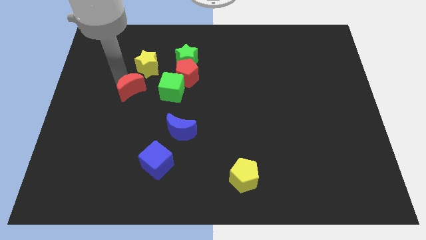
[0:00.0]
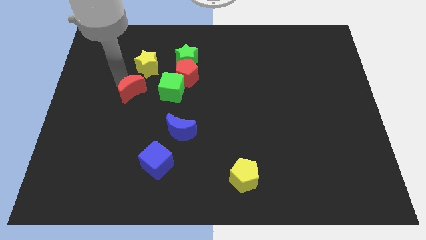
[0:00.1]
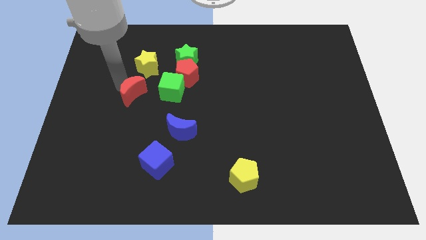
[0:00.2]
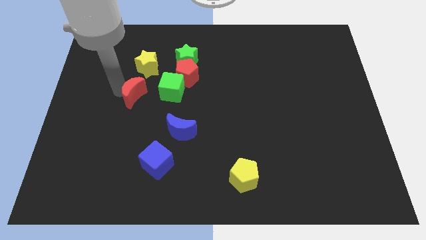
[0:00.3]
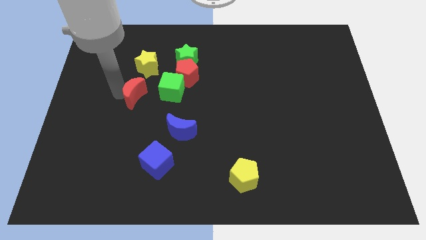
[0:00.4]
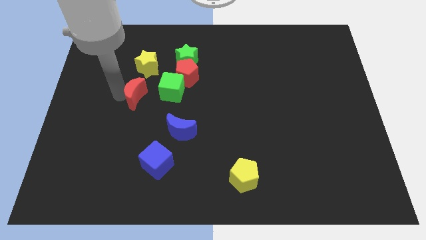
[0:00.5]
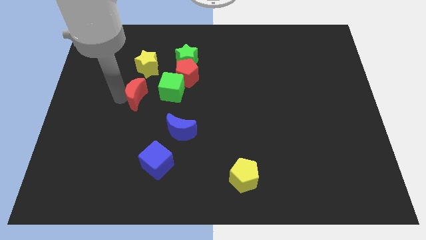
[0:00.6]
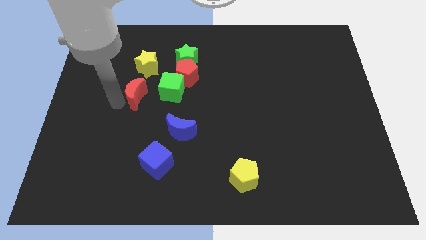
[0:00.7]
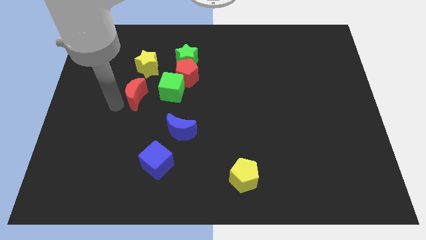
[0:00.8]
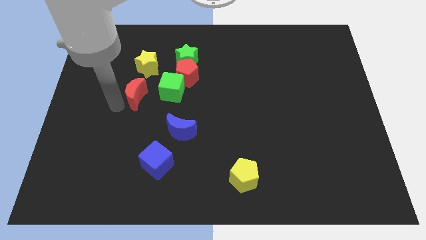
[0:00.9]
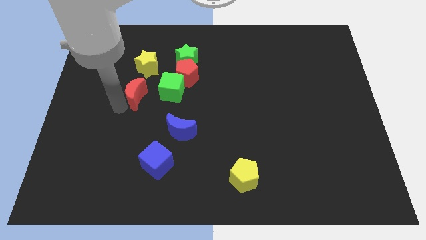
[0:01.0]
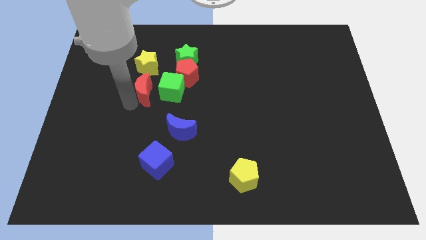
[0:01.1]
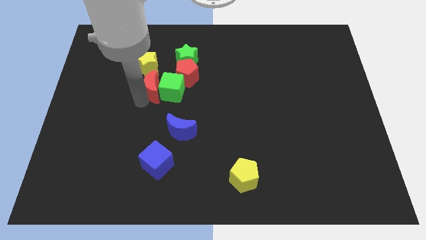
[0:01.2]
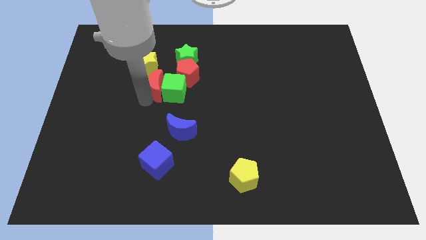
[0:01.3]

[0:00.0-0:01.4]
place the red pentagon at the left side of the green cube

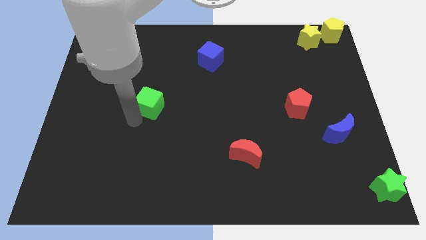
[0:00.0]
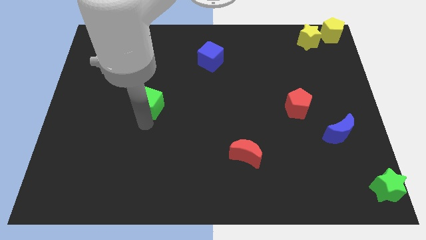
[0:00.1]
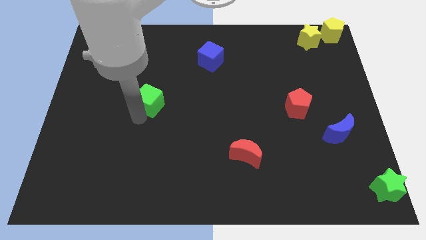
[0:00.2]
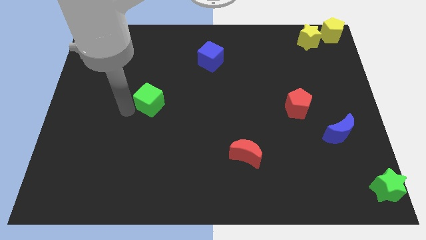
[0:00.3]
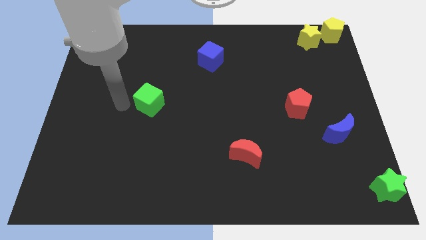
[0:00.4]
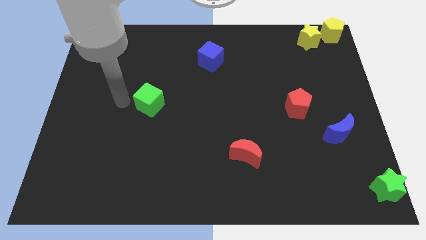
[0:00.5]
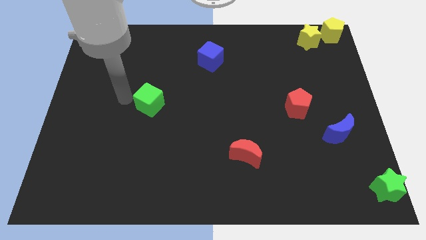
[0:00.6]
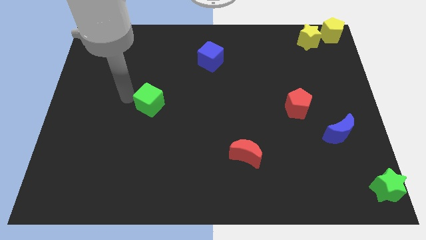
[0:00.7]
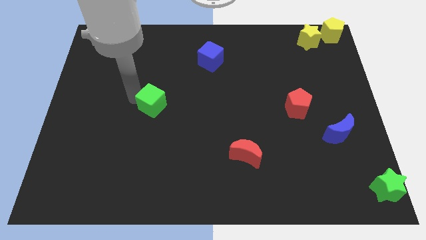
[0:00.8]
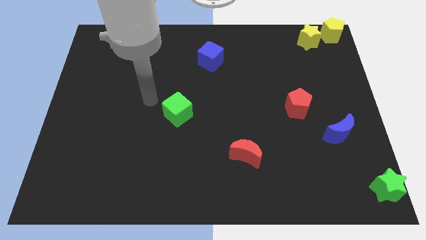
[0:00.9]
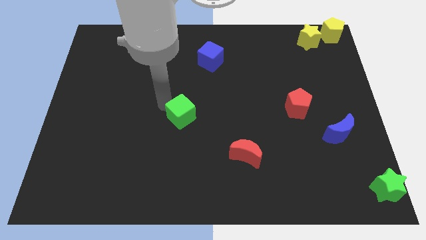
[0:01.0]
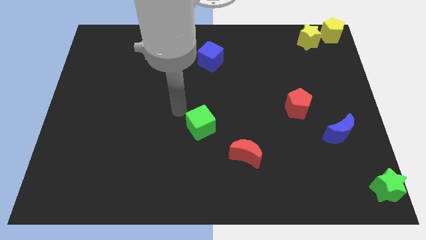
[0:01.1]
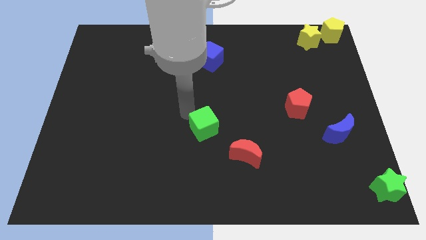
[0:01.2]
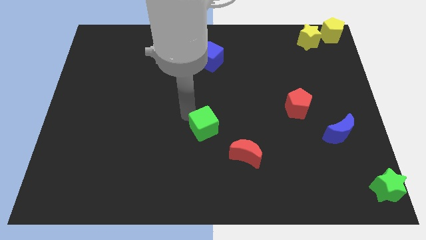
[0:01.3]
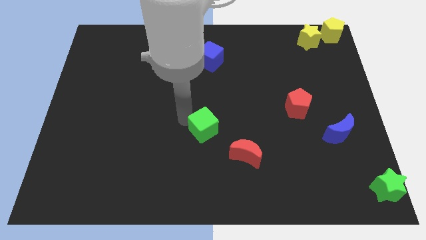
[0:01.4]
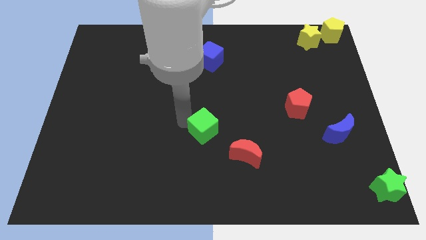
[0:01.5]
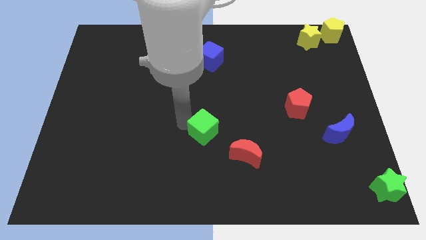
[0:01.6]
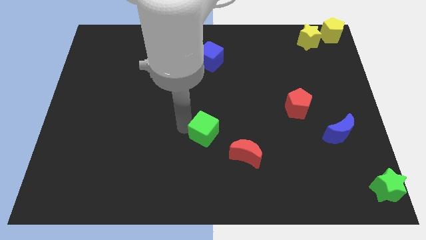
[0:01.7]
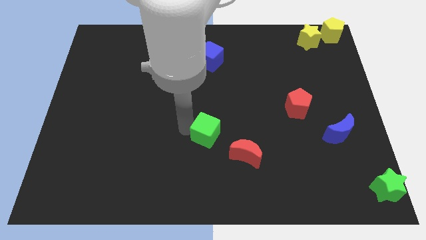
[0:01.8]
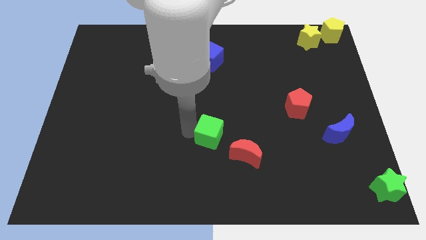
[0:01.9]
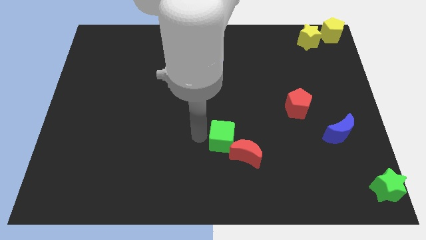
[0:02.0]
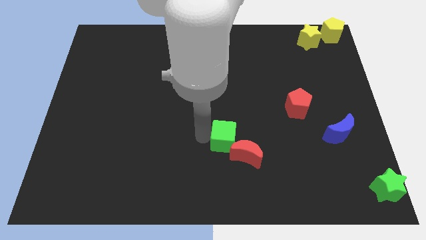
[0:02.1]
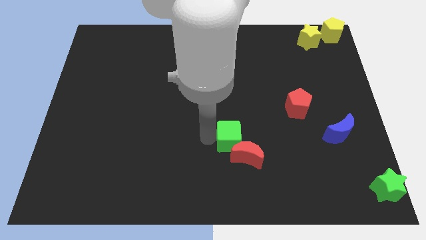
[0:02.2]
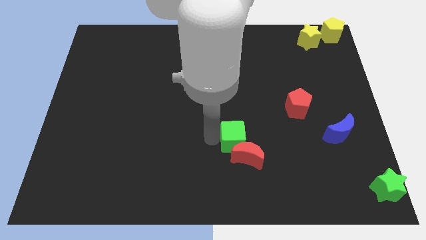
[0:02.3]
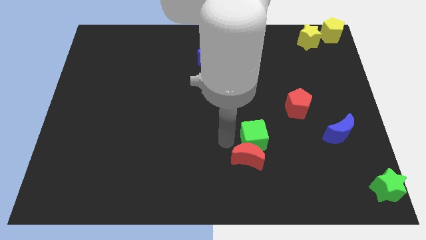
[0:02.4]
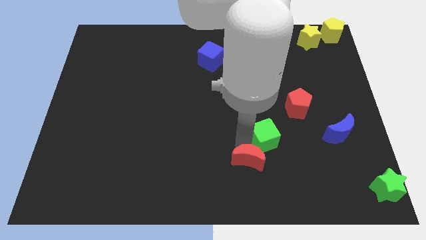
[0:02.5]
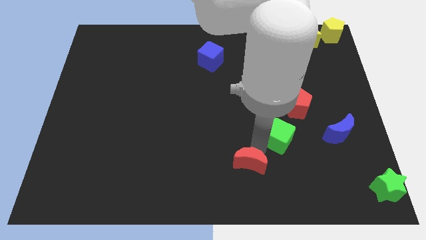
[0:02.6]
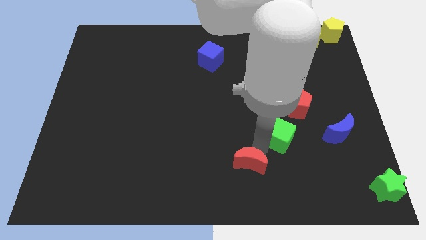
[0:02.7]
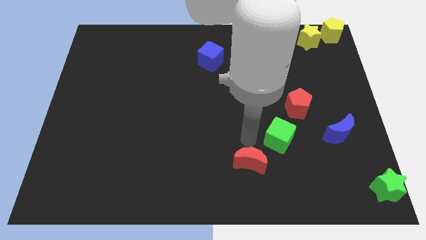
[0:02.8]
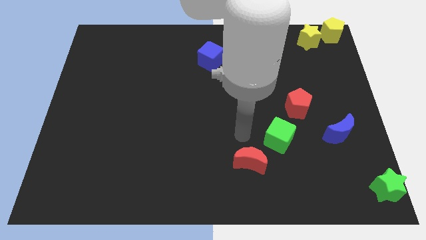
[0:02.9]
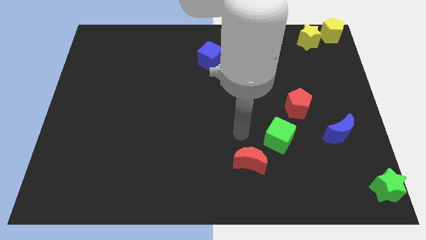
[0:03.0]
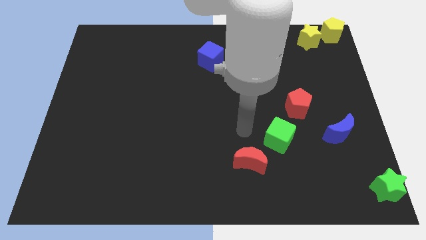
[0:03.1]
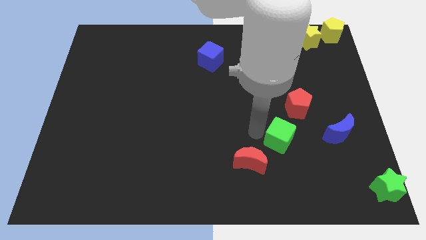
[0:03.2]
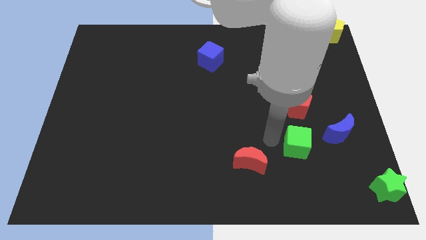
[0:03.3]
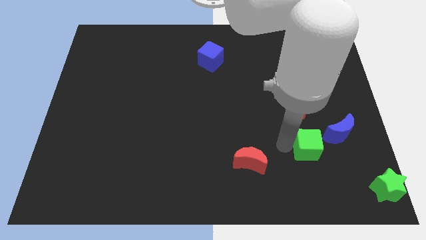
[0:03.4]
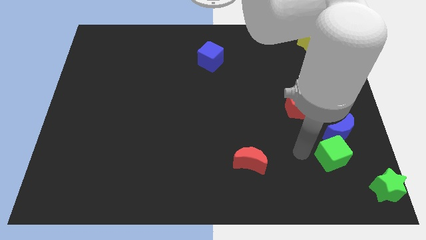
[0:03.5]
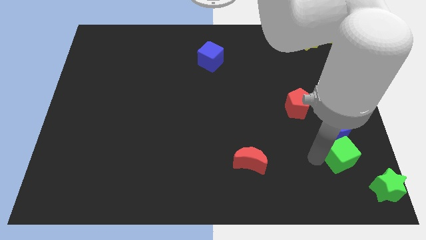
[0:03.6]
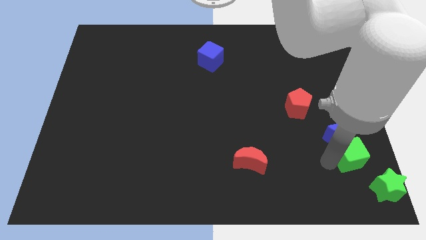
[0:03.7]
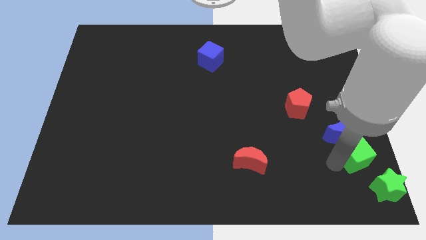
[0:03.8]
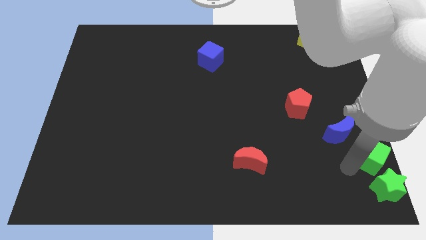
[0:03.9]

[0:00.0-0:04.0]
slide the green cube in between the blue crescent and green star

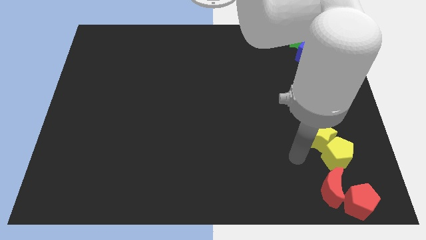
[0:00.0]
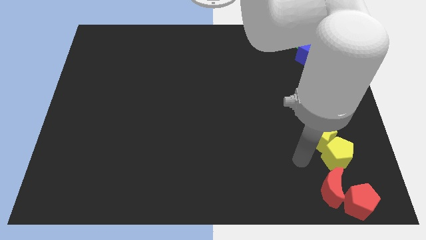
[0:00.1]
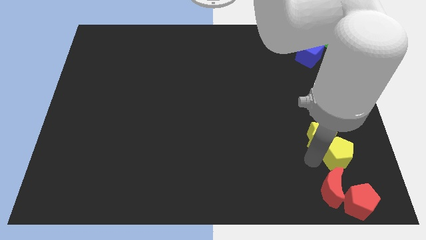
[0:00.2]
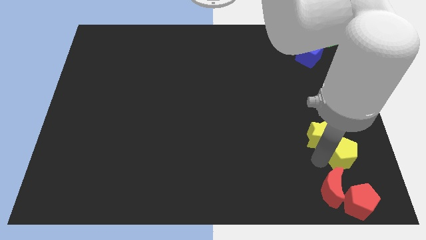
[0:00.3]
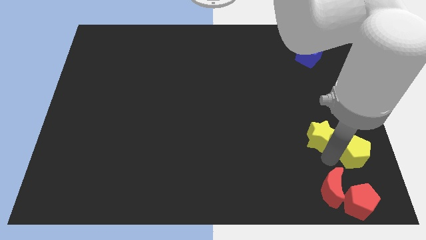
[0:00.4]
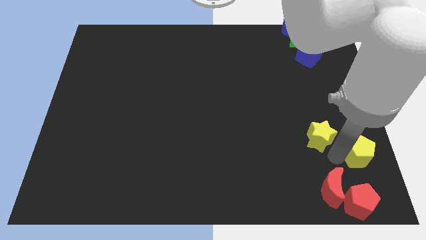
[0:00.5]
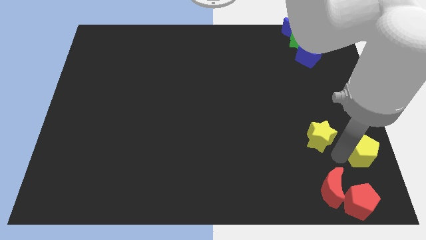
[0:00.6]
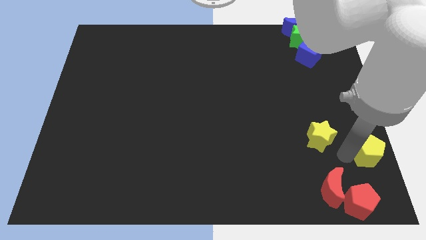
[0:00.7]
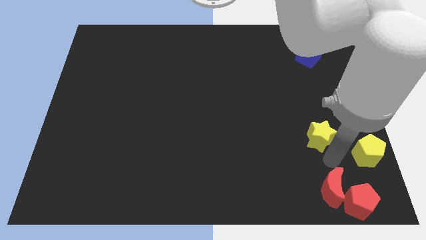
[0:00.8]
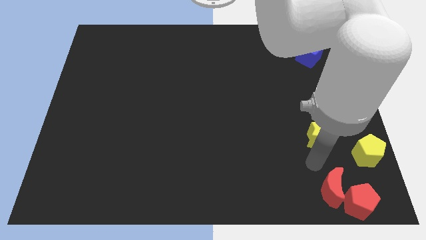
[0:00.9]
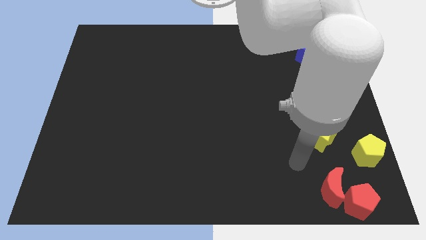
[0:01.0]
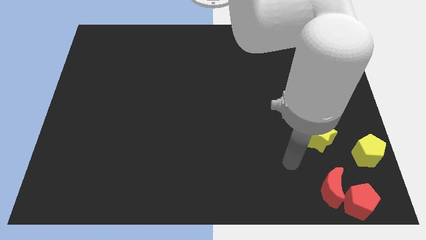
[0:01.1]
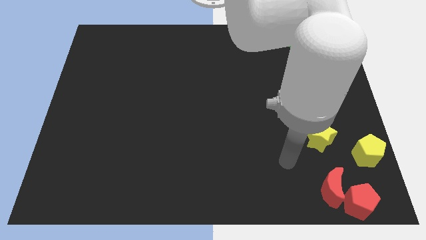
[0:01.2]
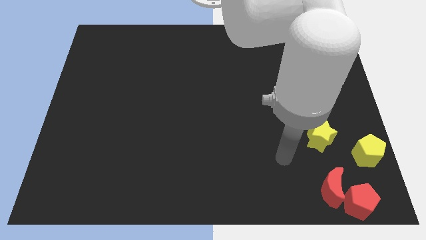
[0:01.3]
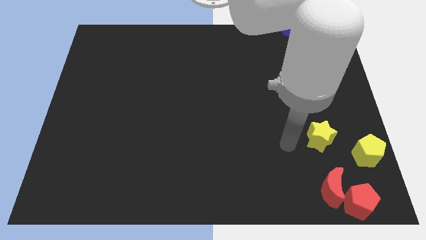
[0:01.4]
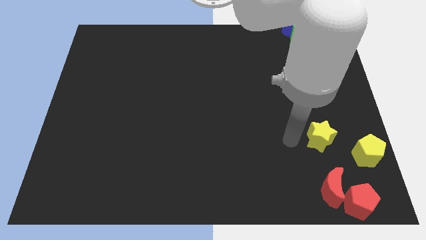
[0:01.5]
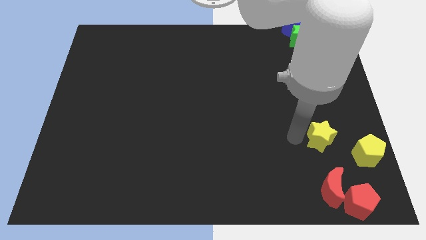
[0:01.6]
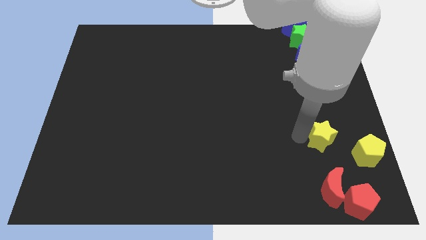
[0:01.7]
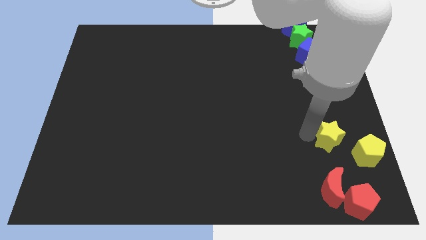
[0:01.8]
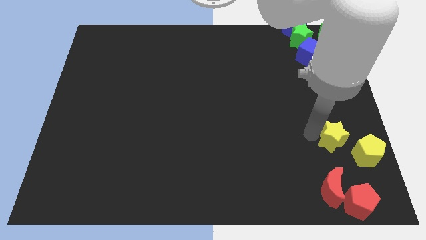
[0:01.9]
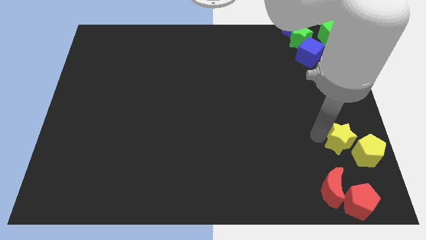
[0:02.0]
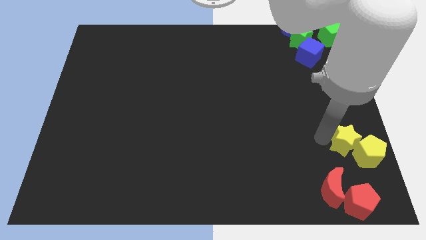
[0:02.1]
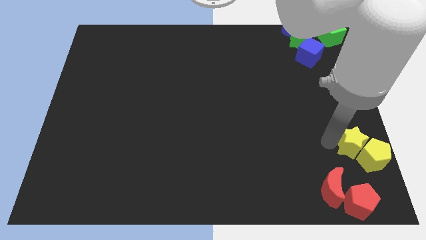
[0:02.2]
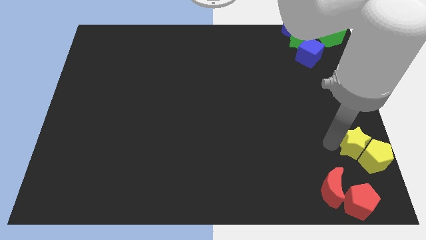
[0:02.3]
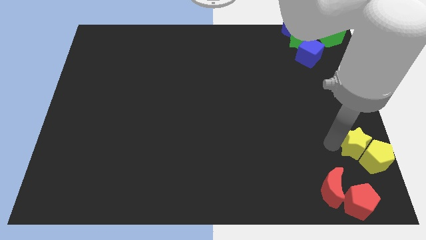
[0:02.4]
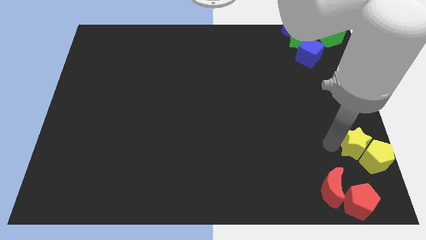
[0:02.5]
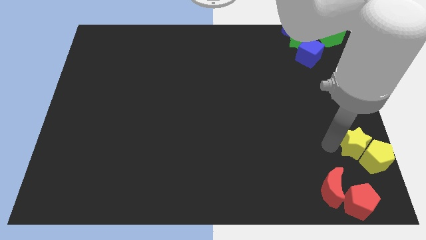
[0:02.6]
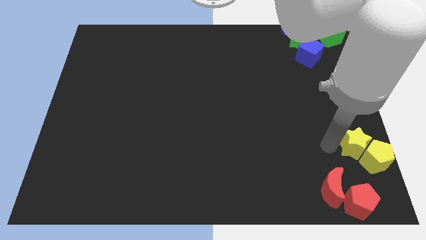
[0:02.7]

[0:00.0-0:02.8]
push the yellow blocks to the top of the red blocks

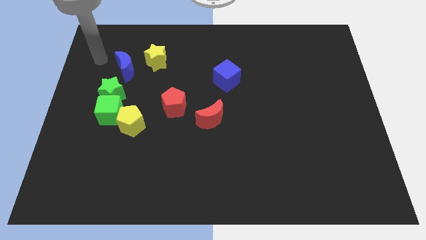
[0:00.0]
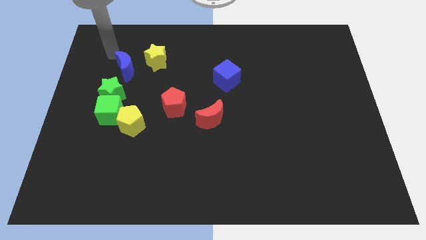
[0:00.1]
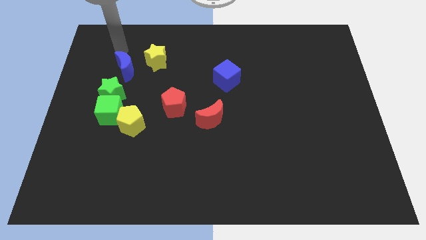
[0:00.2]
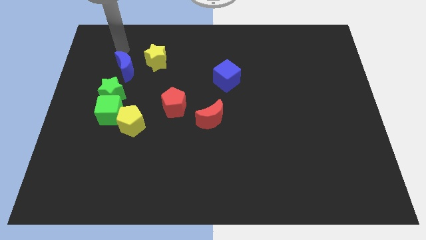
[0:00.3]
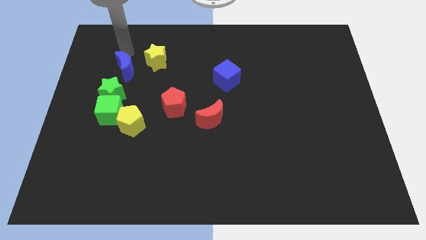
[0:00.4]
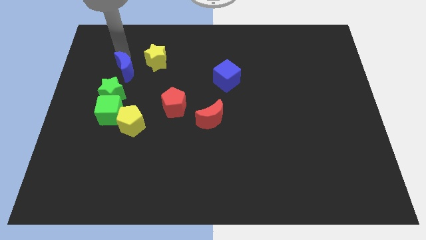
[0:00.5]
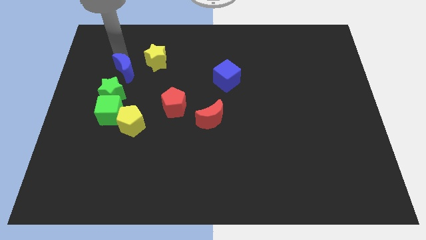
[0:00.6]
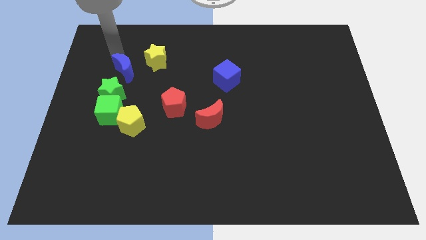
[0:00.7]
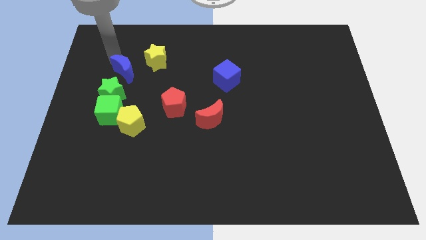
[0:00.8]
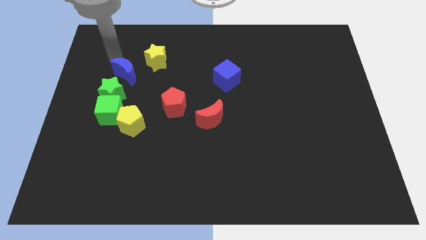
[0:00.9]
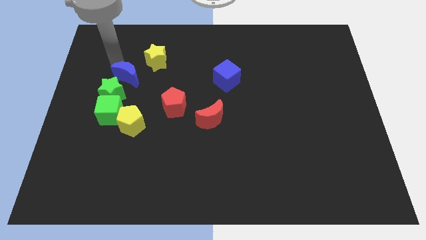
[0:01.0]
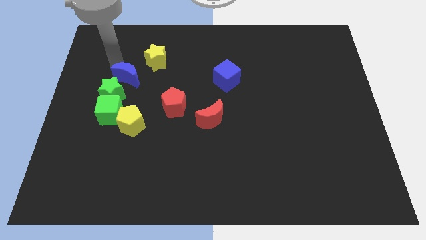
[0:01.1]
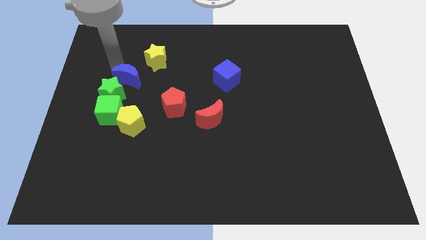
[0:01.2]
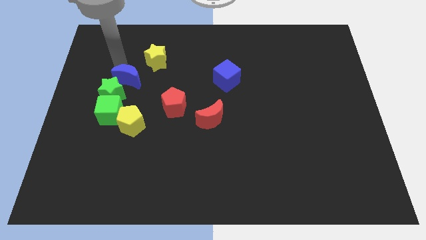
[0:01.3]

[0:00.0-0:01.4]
slightly move down the blue moon
